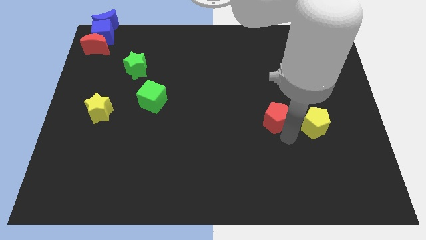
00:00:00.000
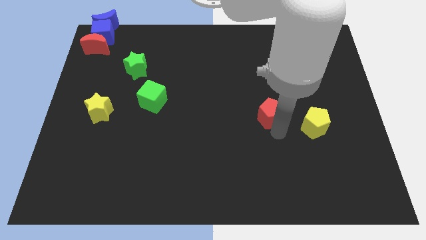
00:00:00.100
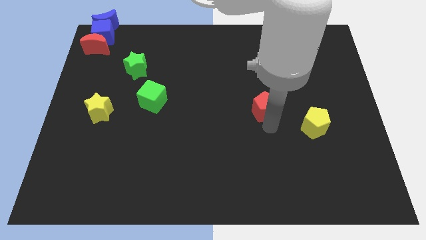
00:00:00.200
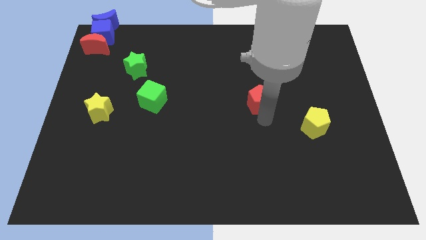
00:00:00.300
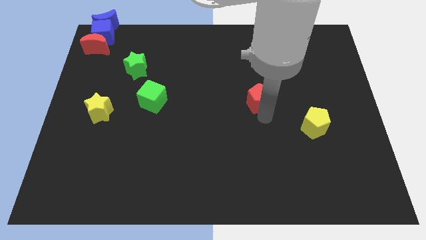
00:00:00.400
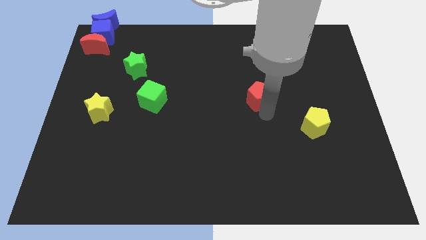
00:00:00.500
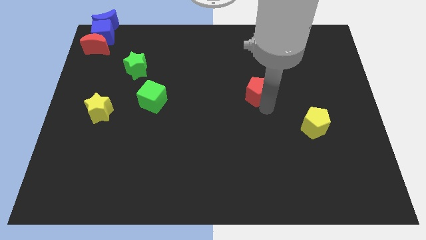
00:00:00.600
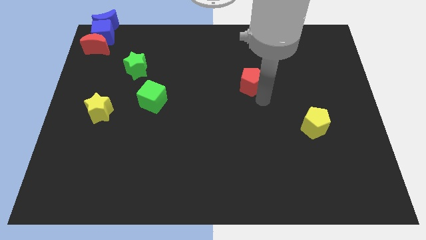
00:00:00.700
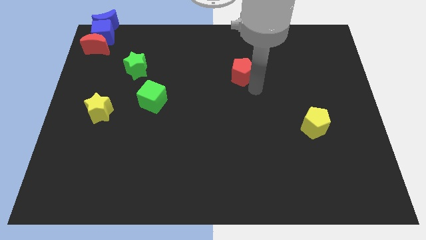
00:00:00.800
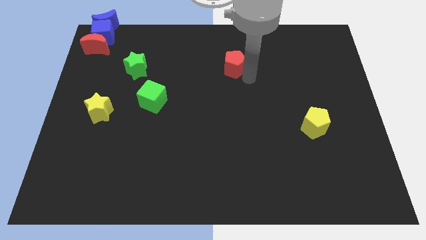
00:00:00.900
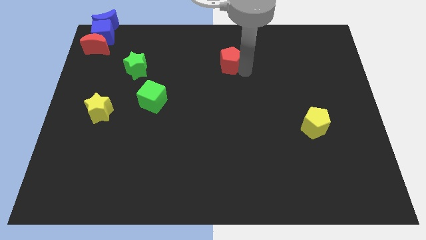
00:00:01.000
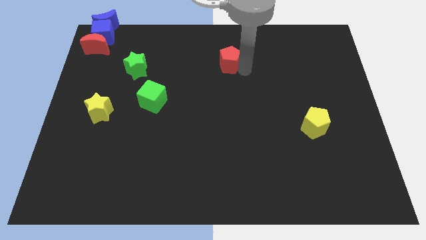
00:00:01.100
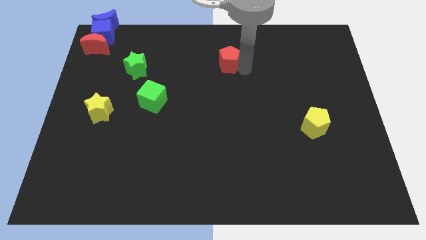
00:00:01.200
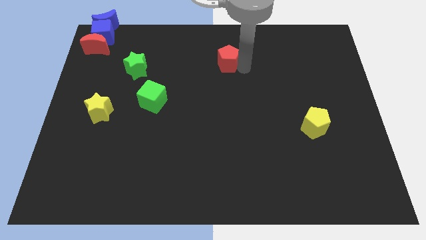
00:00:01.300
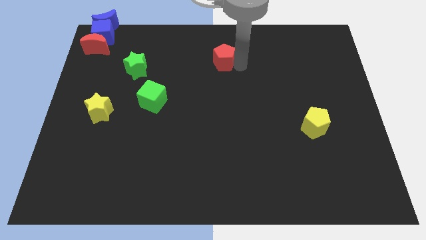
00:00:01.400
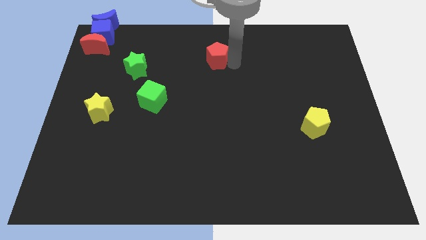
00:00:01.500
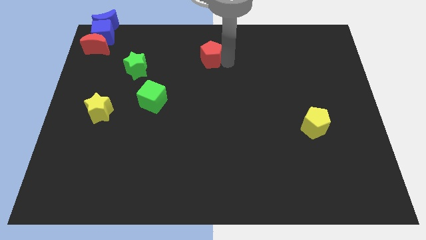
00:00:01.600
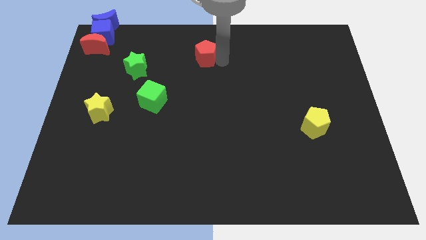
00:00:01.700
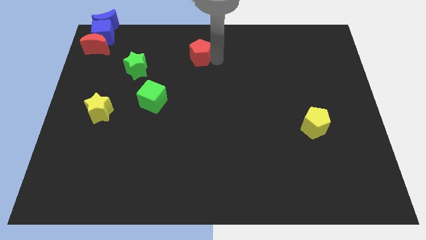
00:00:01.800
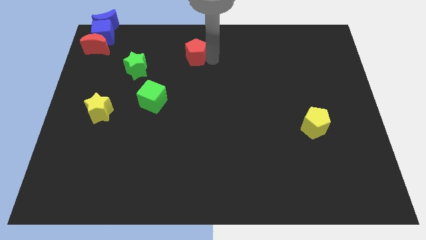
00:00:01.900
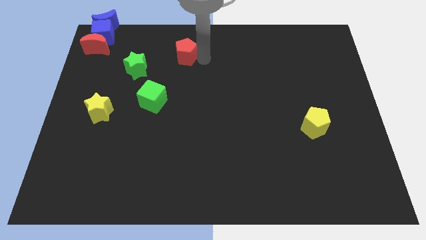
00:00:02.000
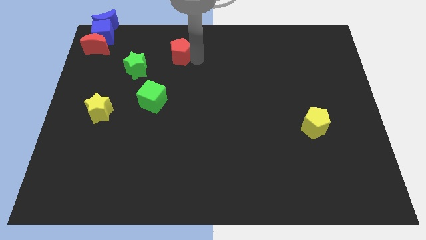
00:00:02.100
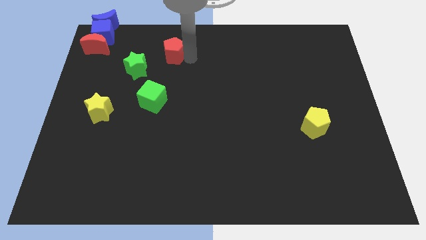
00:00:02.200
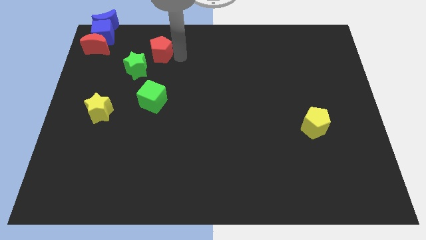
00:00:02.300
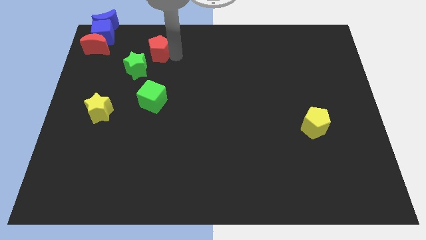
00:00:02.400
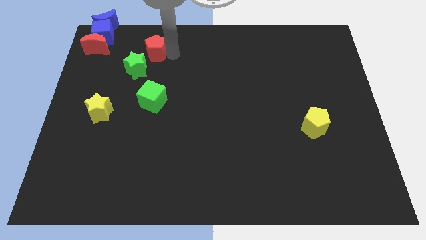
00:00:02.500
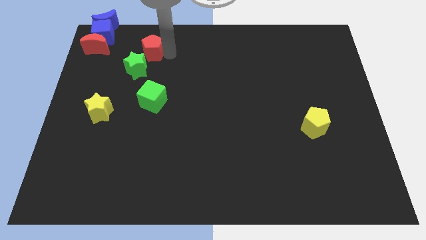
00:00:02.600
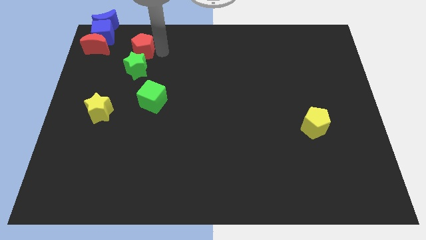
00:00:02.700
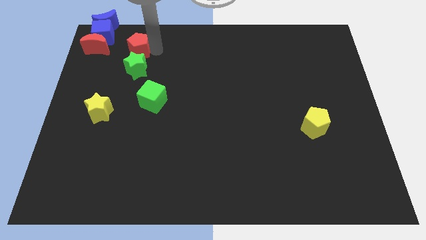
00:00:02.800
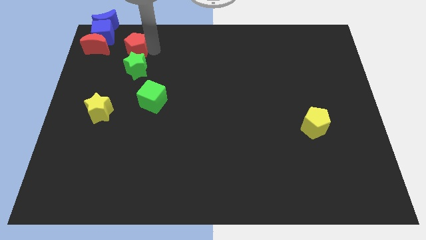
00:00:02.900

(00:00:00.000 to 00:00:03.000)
push red pentagon above green star

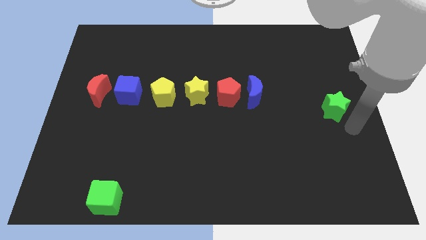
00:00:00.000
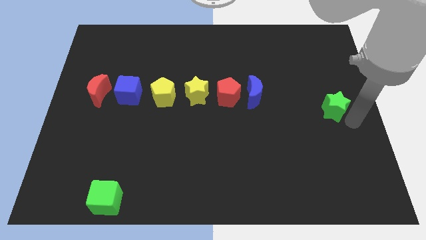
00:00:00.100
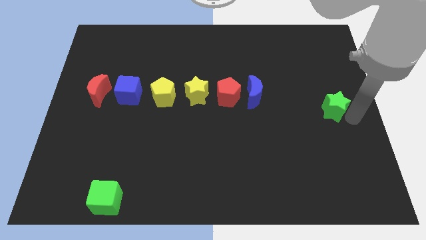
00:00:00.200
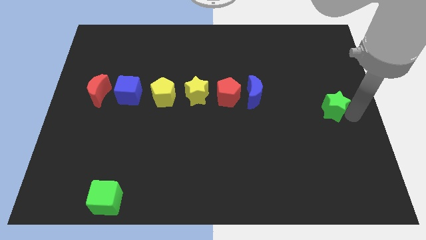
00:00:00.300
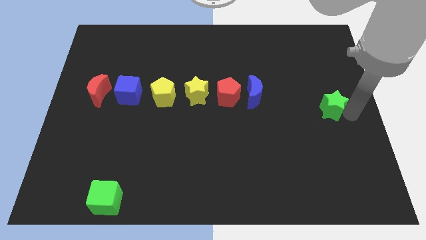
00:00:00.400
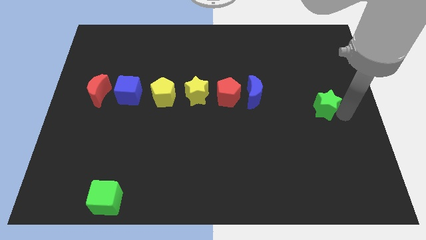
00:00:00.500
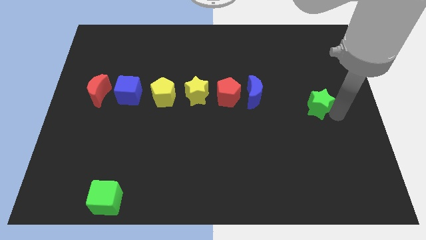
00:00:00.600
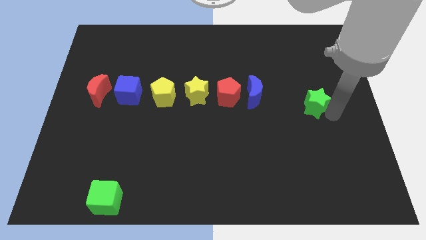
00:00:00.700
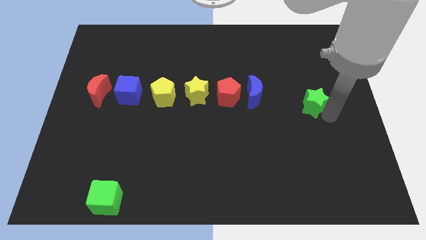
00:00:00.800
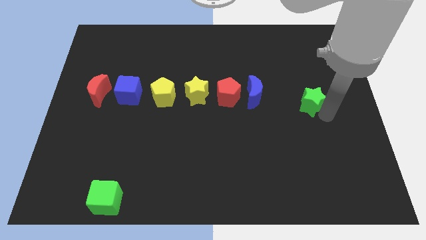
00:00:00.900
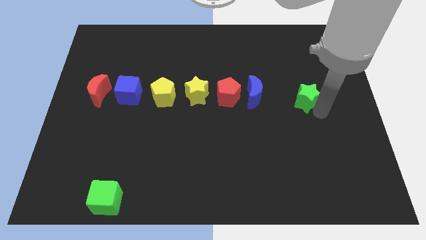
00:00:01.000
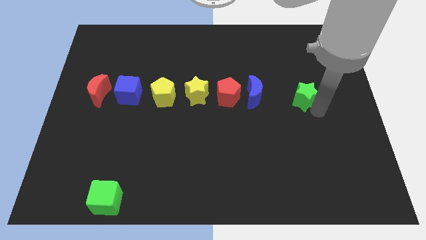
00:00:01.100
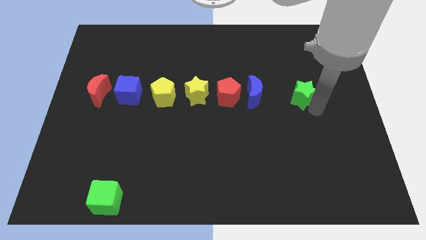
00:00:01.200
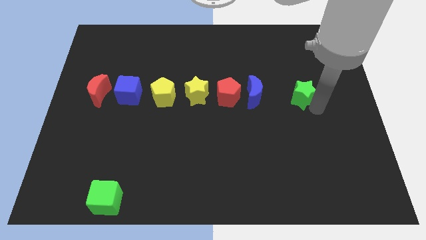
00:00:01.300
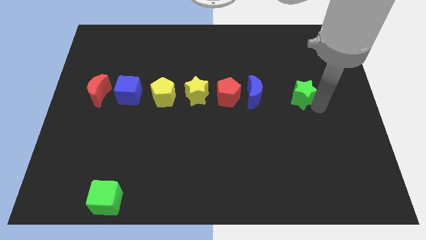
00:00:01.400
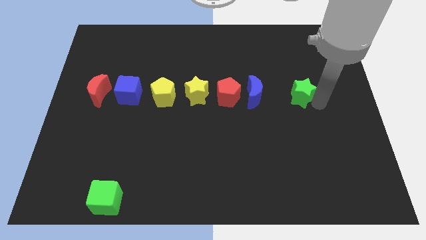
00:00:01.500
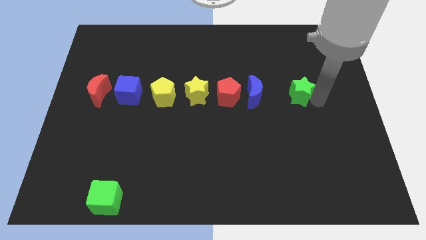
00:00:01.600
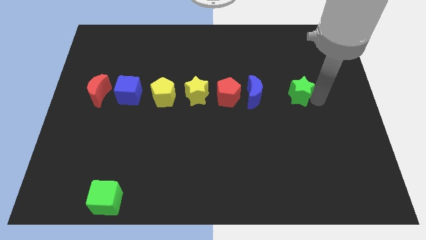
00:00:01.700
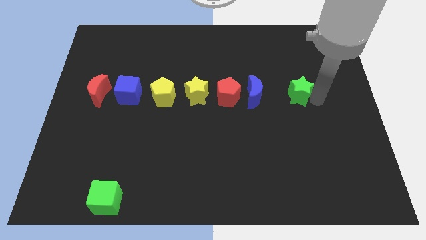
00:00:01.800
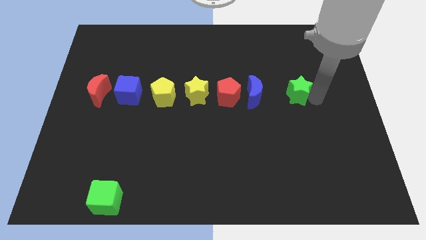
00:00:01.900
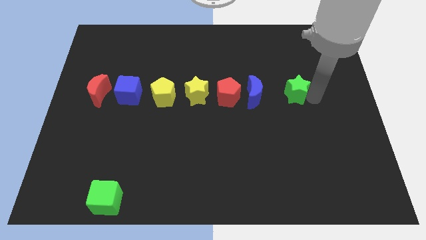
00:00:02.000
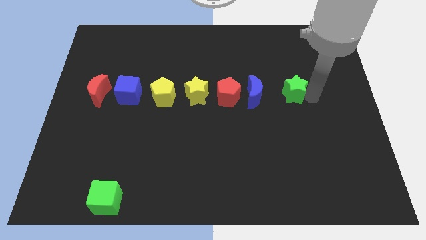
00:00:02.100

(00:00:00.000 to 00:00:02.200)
move the green star to the right of the blue crescent

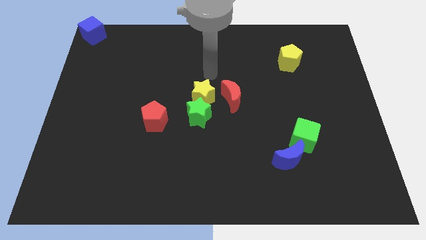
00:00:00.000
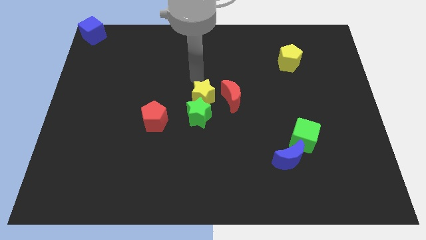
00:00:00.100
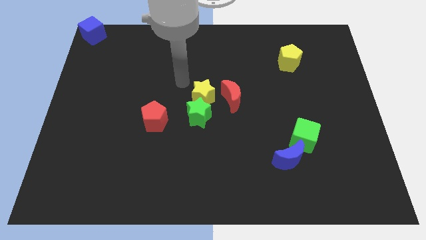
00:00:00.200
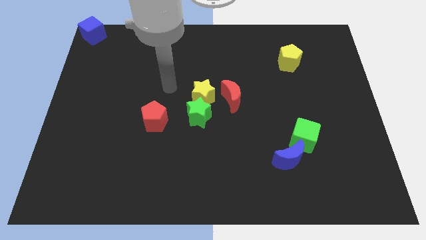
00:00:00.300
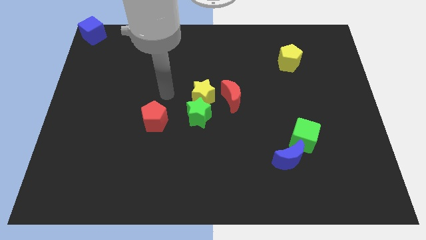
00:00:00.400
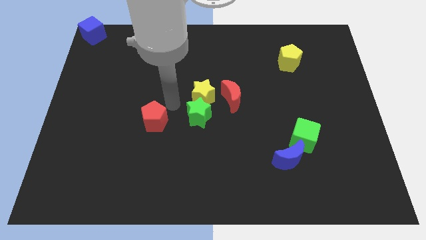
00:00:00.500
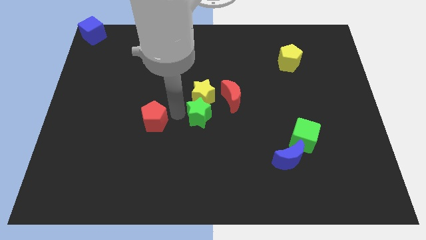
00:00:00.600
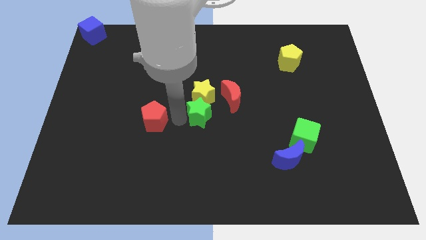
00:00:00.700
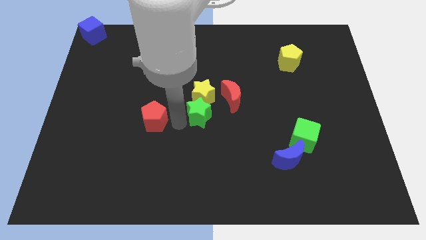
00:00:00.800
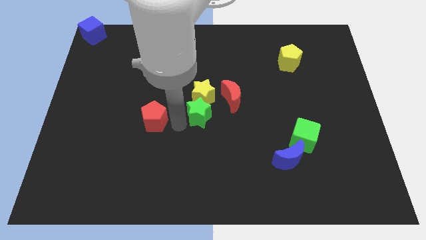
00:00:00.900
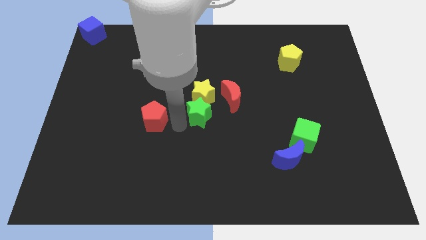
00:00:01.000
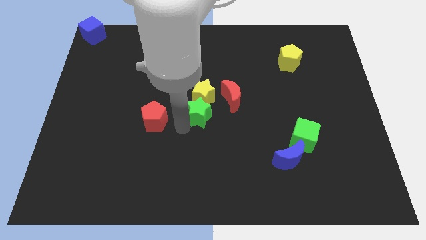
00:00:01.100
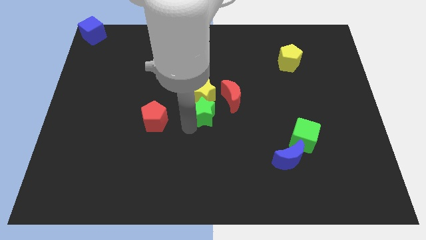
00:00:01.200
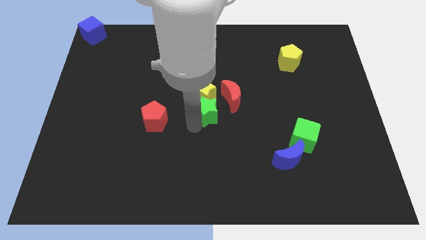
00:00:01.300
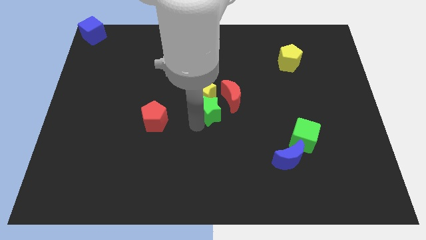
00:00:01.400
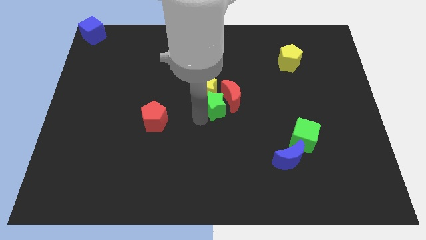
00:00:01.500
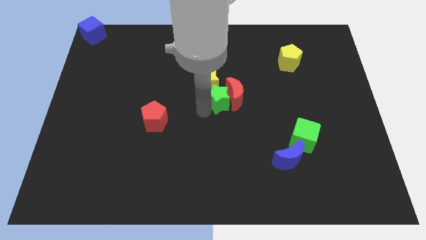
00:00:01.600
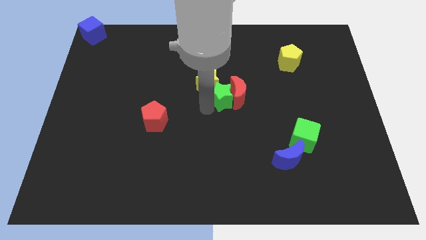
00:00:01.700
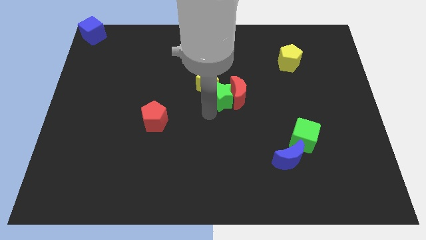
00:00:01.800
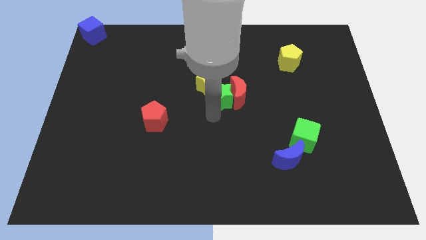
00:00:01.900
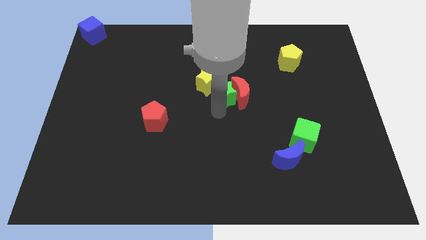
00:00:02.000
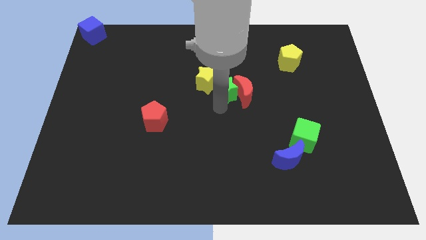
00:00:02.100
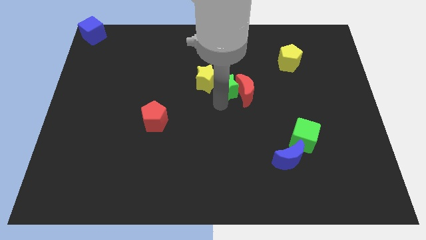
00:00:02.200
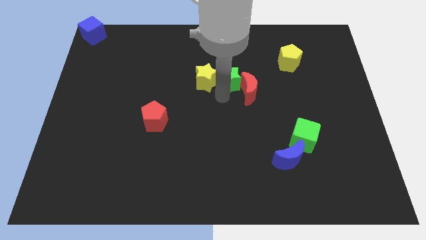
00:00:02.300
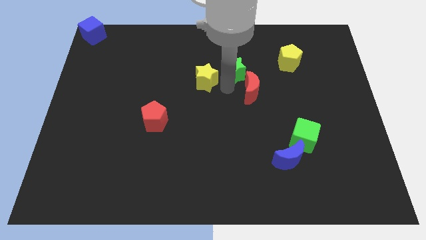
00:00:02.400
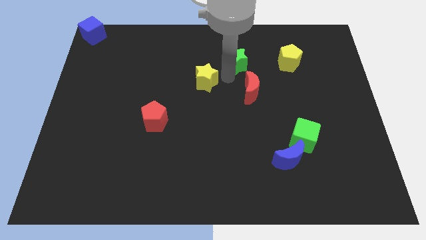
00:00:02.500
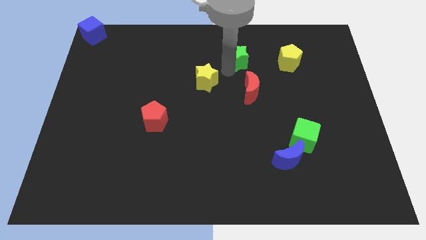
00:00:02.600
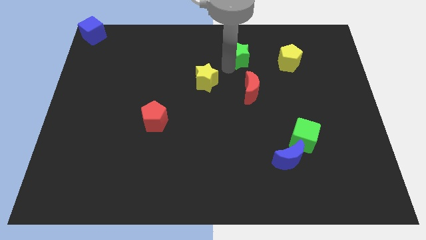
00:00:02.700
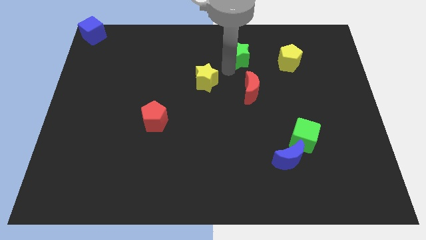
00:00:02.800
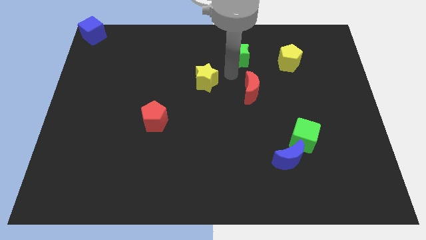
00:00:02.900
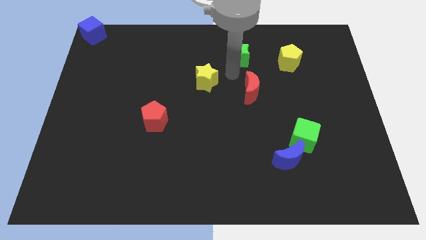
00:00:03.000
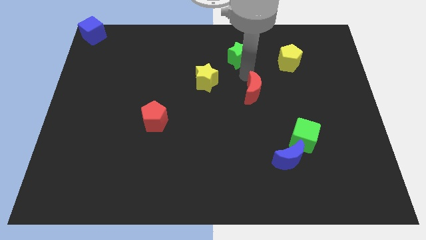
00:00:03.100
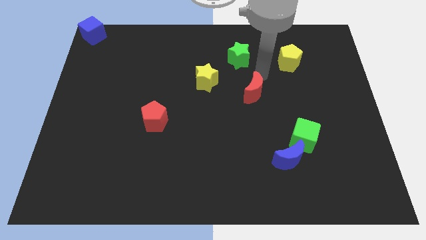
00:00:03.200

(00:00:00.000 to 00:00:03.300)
push the green star to the left side of the yellow pentagon

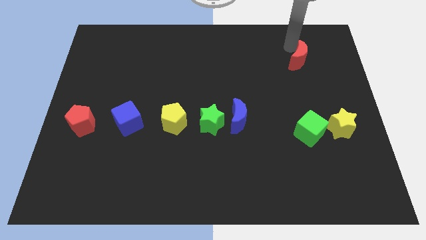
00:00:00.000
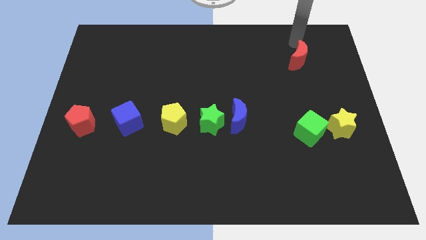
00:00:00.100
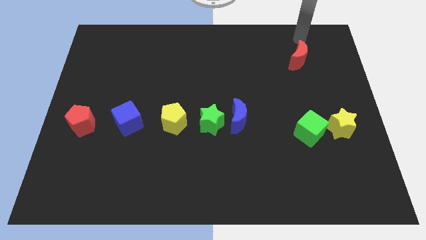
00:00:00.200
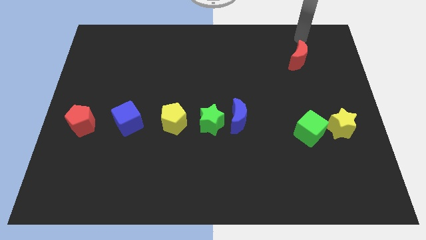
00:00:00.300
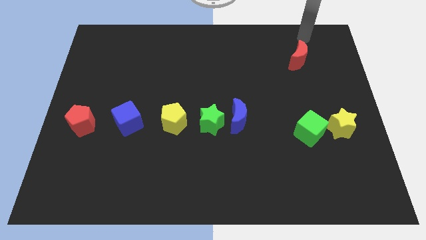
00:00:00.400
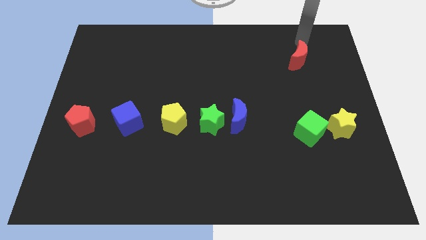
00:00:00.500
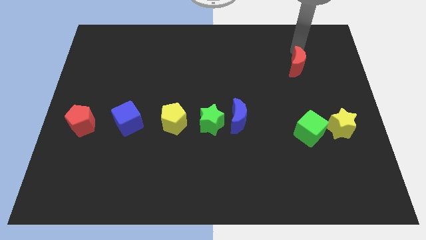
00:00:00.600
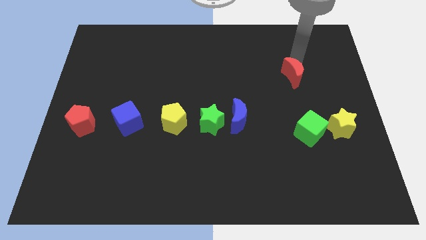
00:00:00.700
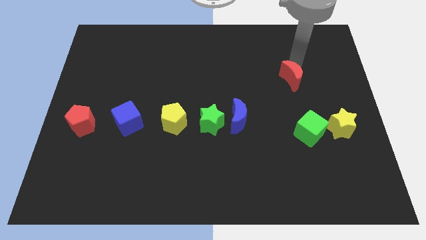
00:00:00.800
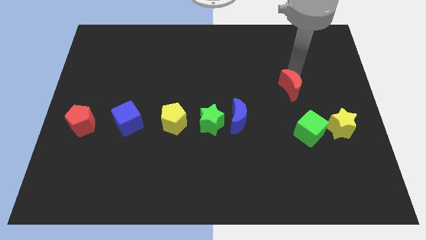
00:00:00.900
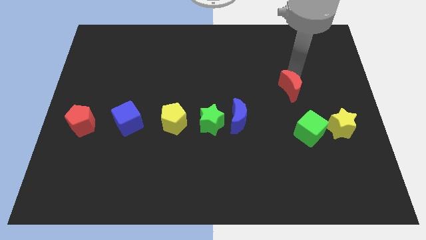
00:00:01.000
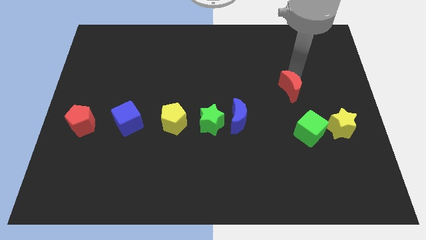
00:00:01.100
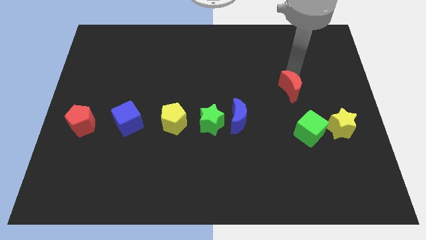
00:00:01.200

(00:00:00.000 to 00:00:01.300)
push the red crescent towards the left side of the green cube
